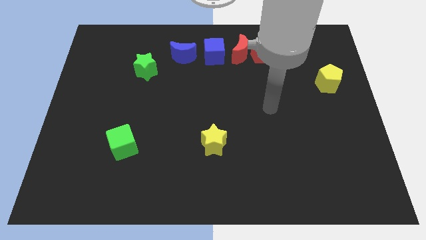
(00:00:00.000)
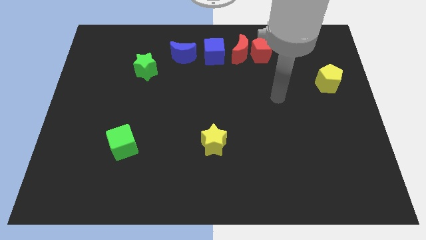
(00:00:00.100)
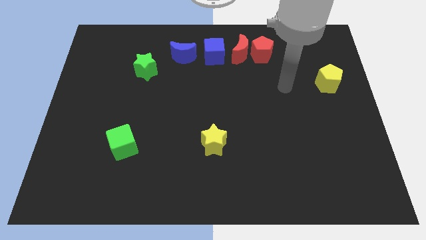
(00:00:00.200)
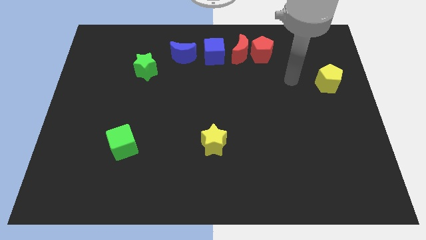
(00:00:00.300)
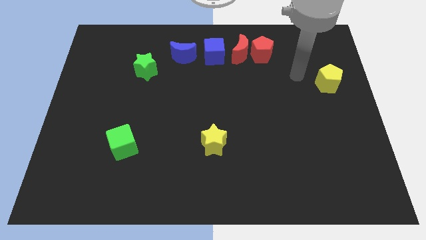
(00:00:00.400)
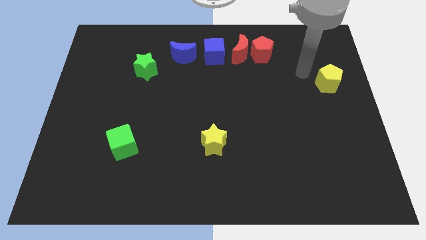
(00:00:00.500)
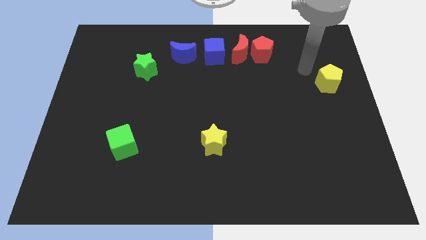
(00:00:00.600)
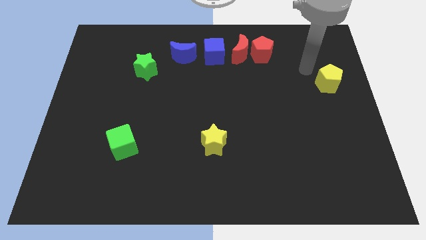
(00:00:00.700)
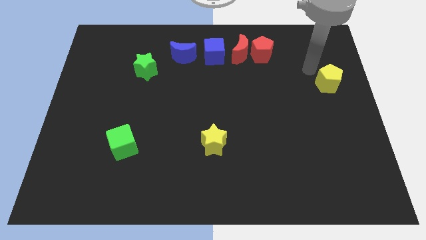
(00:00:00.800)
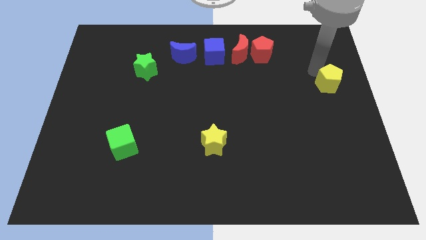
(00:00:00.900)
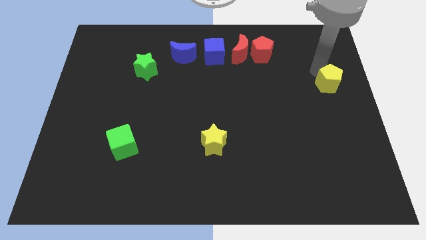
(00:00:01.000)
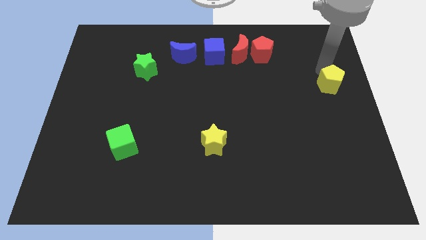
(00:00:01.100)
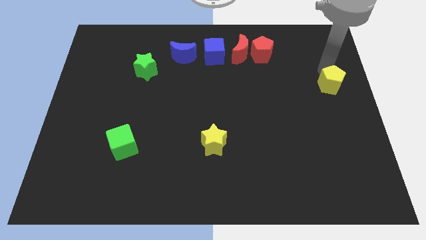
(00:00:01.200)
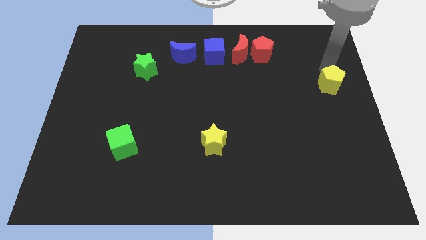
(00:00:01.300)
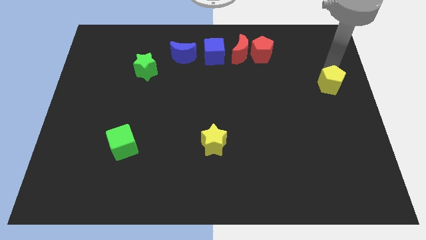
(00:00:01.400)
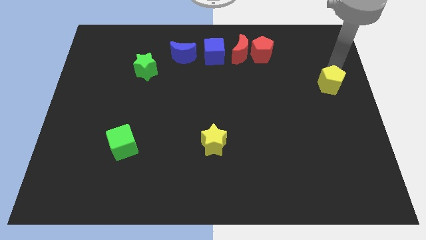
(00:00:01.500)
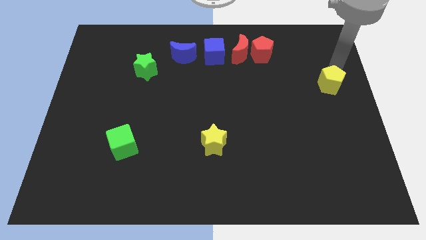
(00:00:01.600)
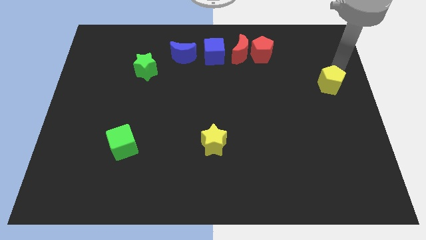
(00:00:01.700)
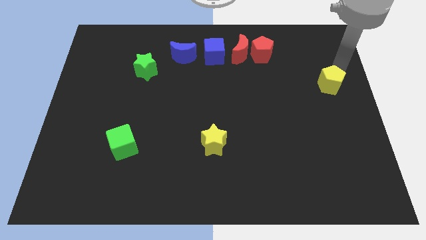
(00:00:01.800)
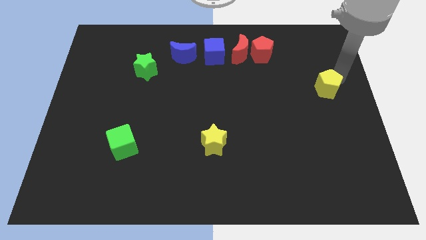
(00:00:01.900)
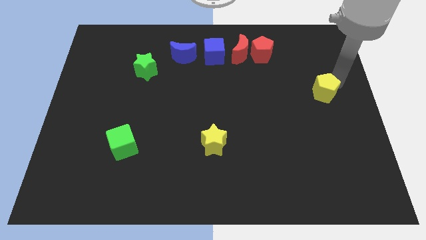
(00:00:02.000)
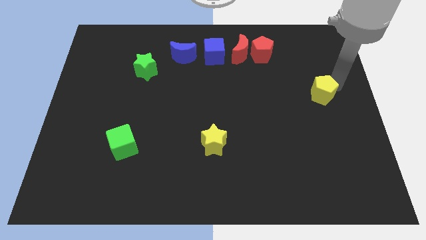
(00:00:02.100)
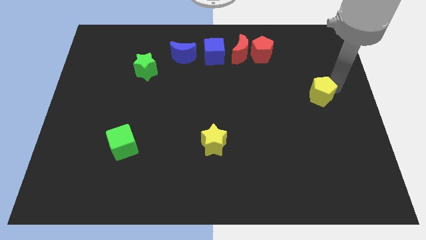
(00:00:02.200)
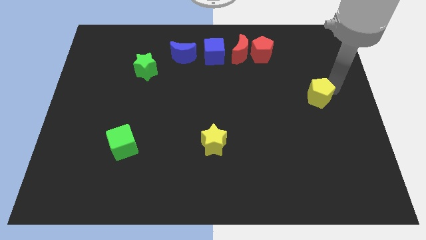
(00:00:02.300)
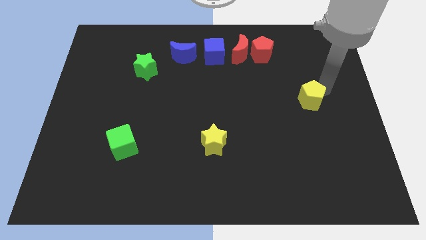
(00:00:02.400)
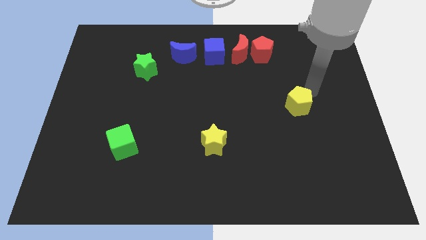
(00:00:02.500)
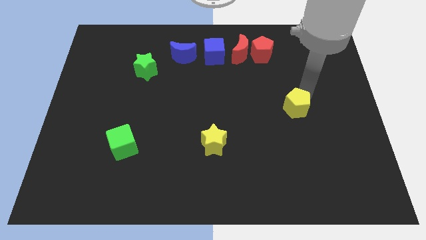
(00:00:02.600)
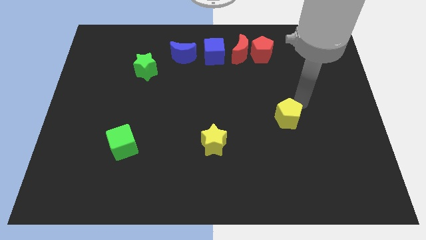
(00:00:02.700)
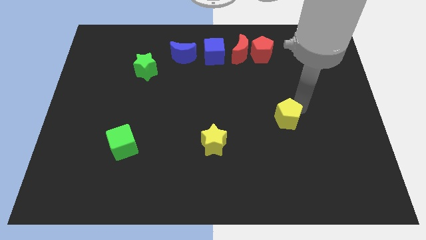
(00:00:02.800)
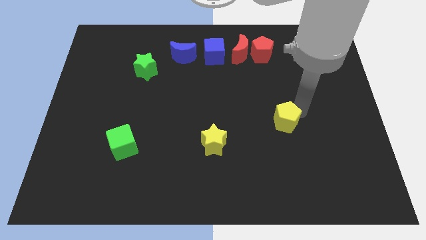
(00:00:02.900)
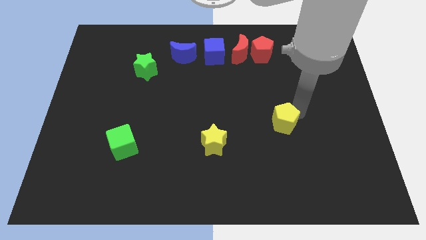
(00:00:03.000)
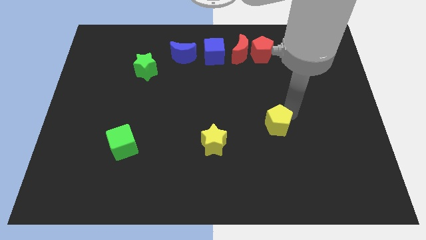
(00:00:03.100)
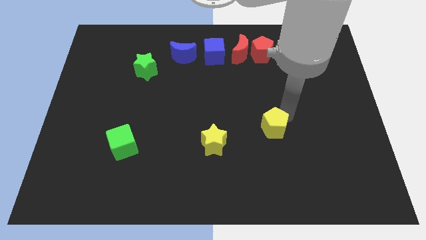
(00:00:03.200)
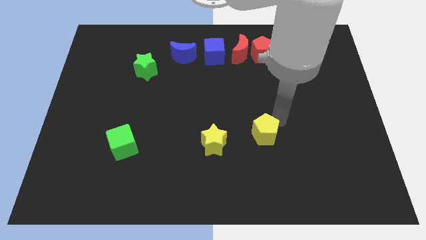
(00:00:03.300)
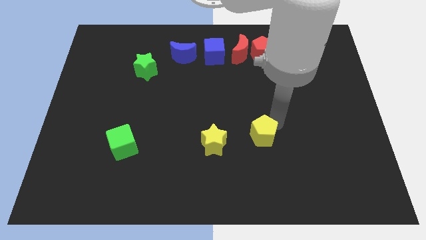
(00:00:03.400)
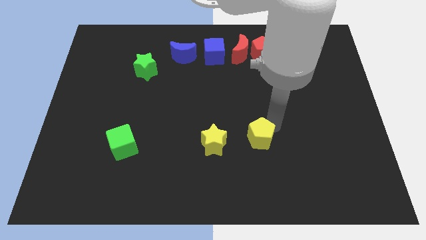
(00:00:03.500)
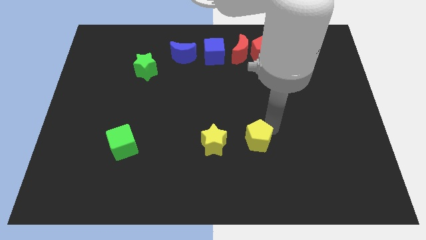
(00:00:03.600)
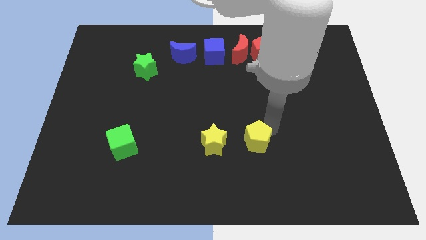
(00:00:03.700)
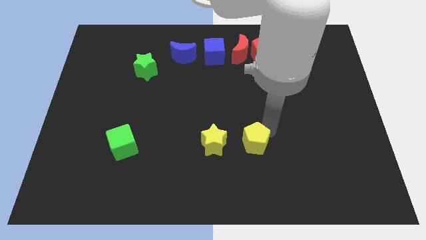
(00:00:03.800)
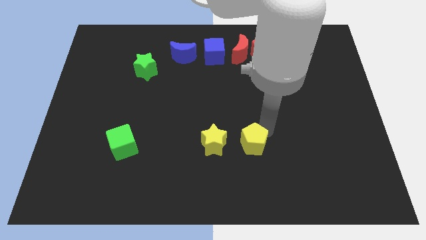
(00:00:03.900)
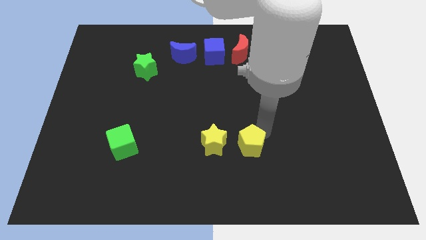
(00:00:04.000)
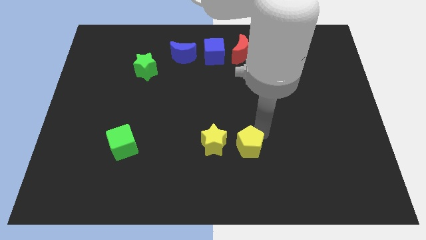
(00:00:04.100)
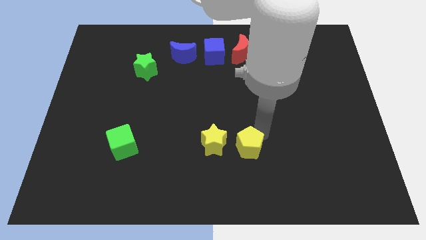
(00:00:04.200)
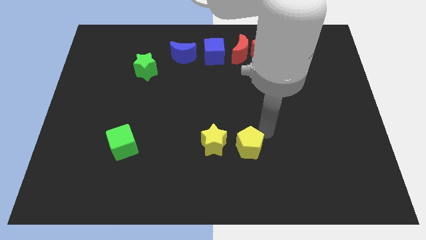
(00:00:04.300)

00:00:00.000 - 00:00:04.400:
move the yellow pentagon to the right of the yellow star

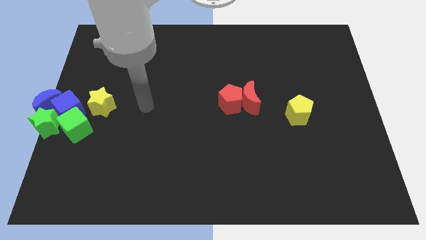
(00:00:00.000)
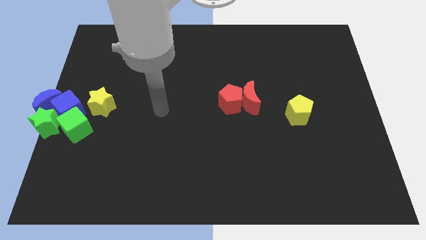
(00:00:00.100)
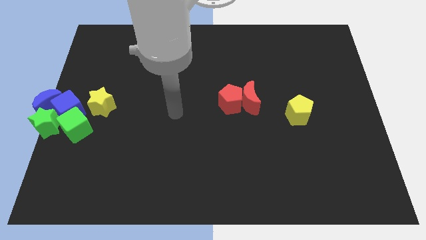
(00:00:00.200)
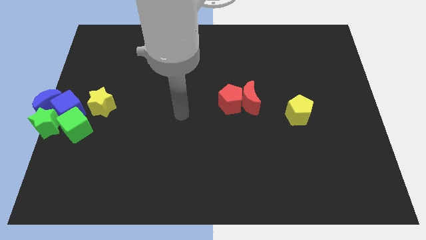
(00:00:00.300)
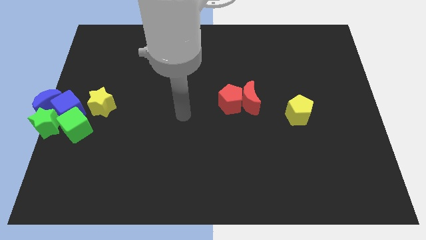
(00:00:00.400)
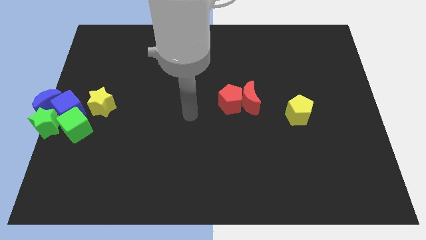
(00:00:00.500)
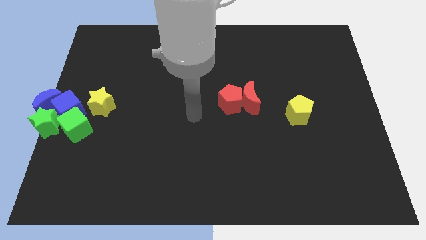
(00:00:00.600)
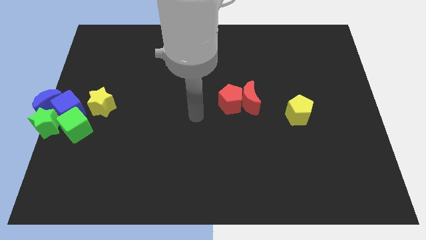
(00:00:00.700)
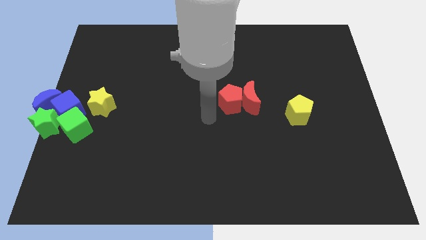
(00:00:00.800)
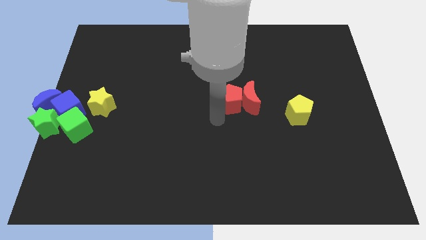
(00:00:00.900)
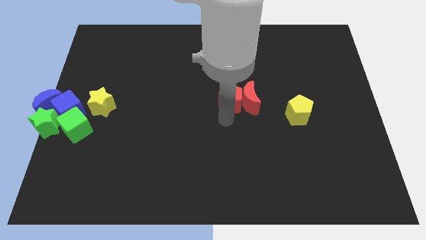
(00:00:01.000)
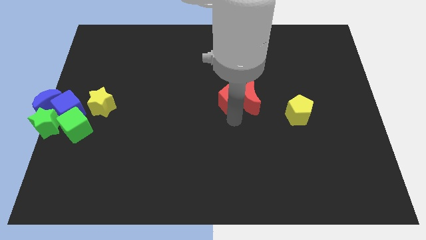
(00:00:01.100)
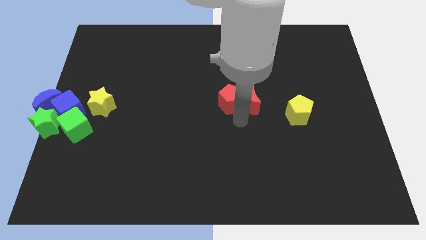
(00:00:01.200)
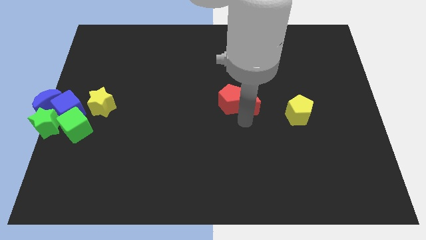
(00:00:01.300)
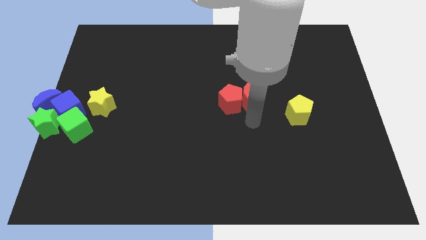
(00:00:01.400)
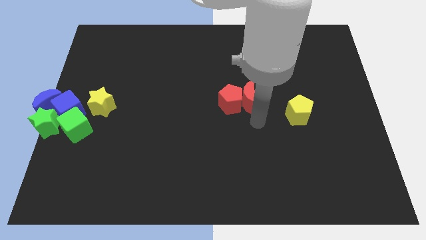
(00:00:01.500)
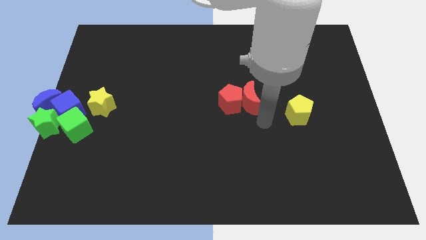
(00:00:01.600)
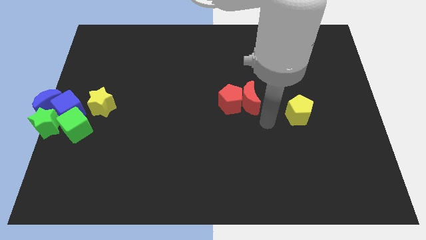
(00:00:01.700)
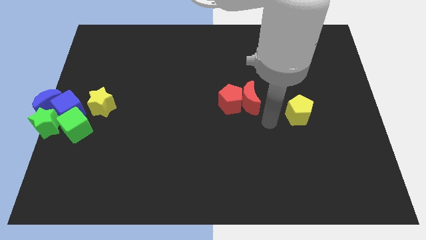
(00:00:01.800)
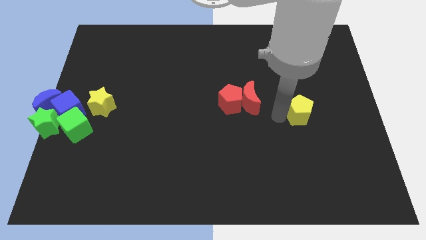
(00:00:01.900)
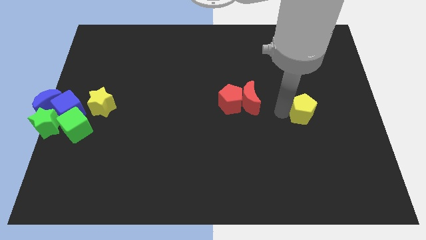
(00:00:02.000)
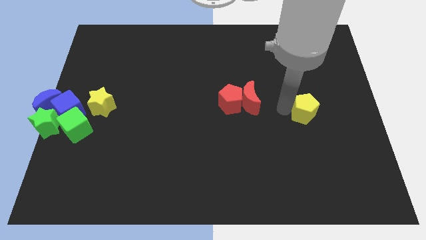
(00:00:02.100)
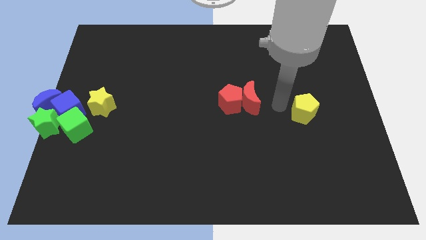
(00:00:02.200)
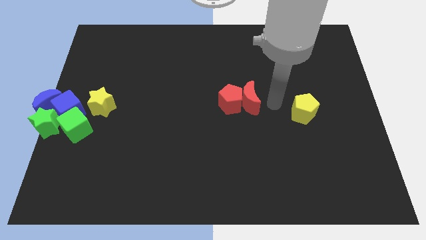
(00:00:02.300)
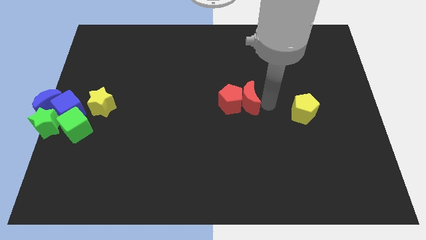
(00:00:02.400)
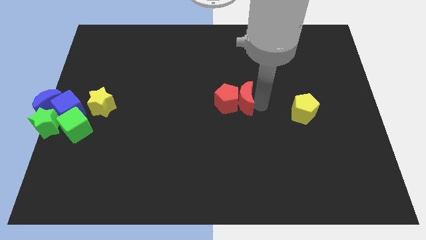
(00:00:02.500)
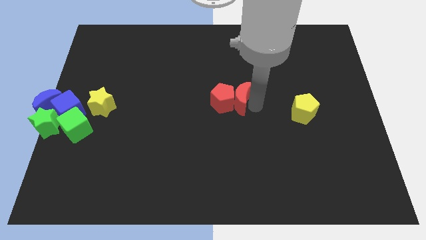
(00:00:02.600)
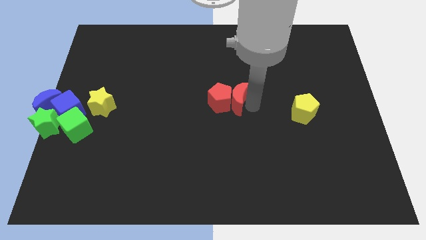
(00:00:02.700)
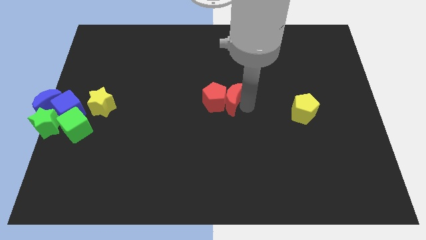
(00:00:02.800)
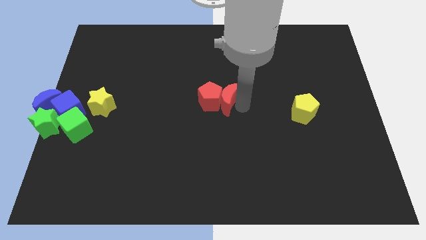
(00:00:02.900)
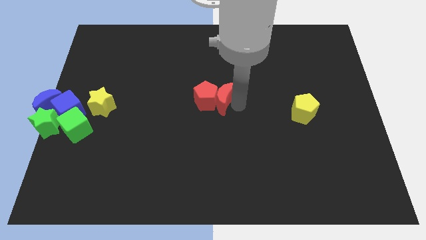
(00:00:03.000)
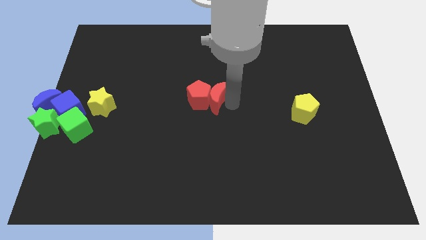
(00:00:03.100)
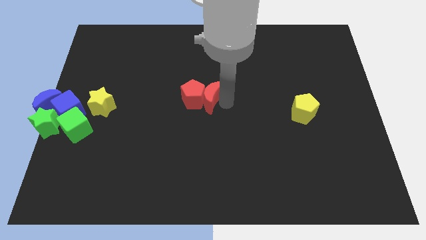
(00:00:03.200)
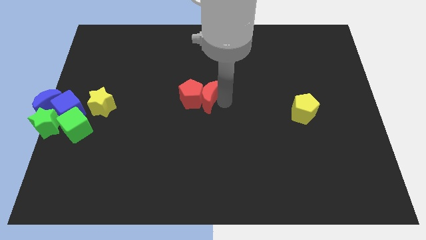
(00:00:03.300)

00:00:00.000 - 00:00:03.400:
place the red pentagon and red moon at the center

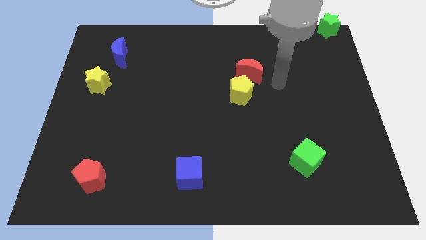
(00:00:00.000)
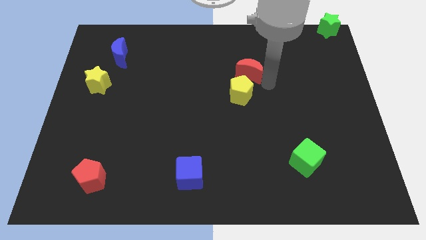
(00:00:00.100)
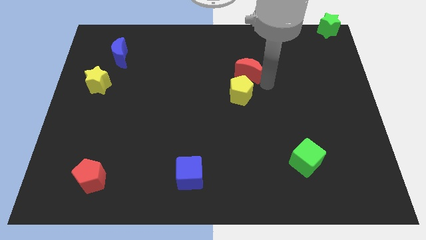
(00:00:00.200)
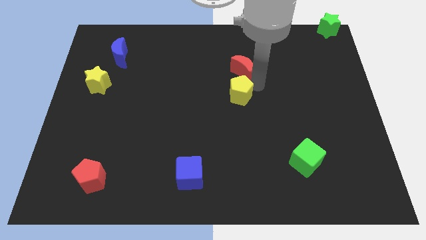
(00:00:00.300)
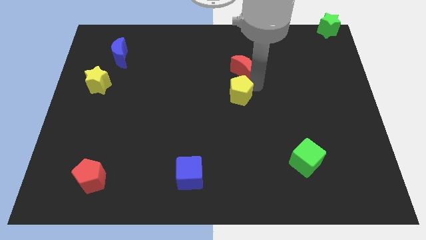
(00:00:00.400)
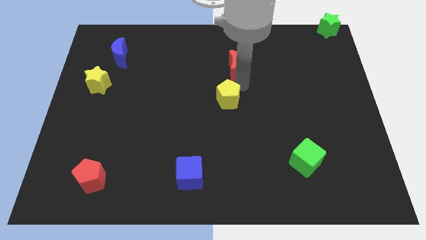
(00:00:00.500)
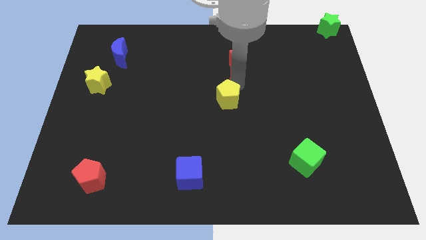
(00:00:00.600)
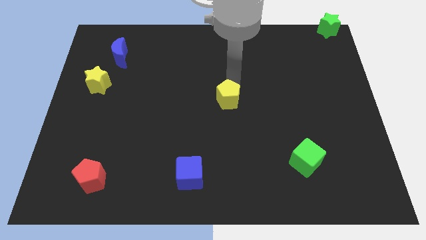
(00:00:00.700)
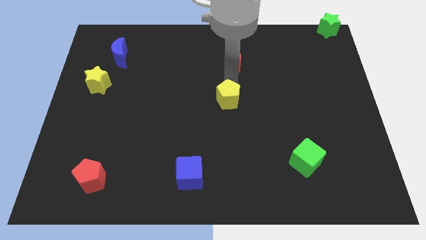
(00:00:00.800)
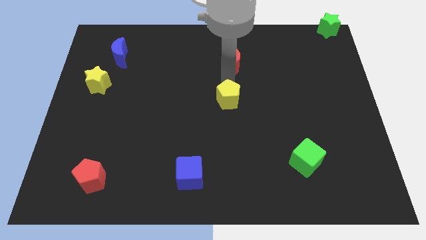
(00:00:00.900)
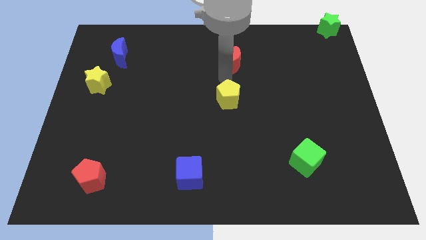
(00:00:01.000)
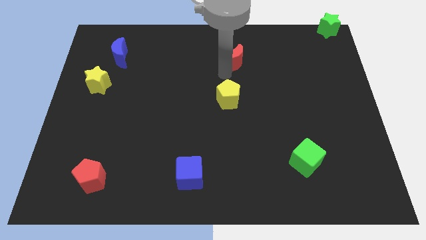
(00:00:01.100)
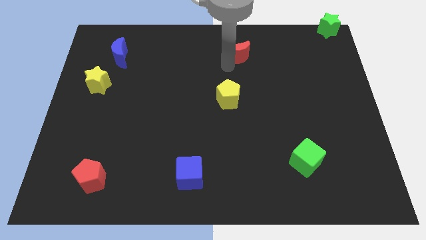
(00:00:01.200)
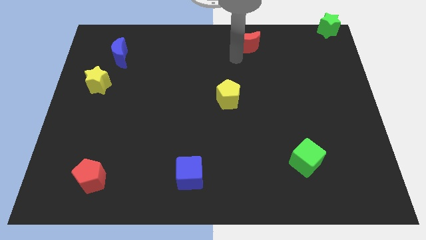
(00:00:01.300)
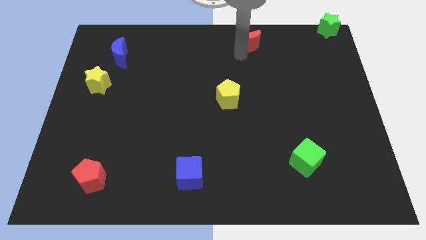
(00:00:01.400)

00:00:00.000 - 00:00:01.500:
separate the red crescent from the yellow pentagon
